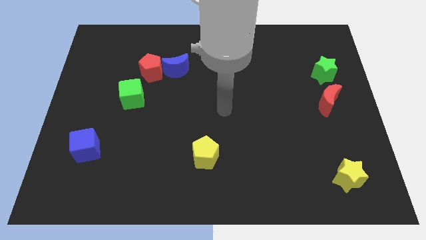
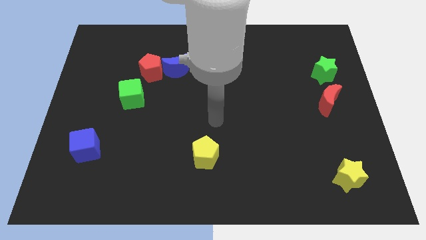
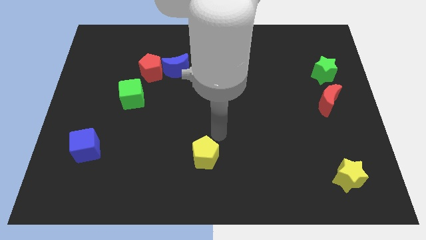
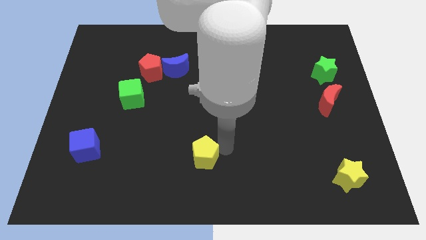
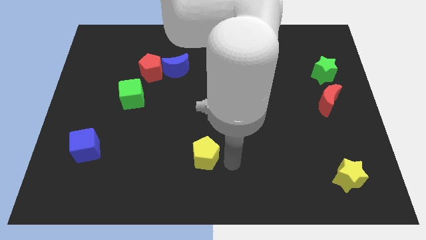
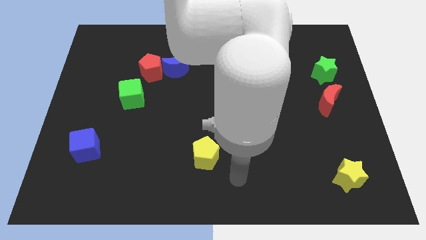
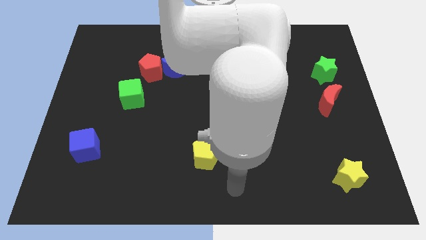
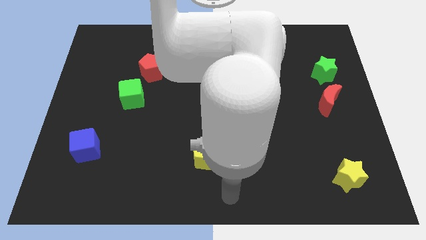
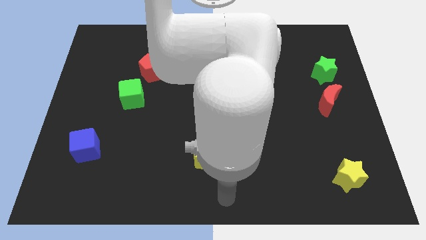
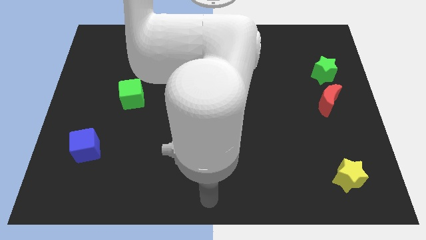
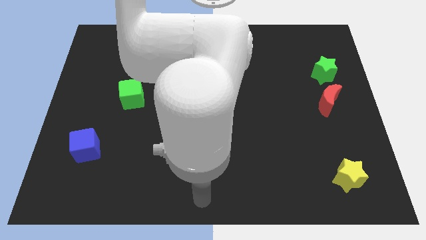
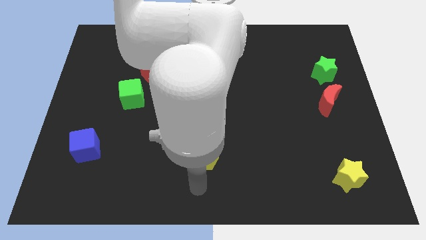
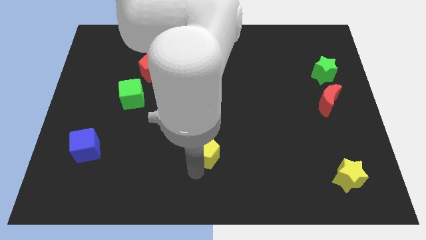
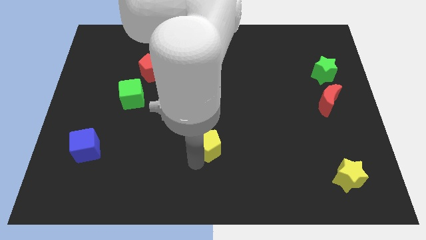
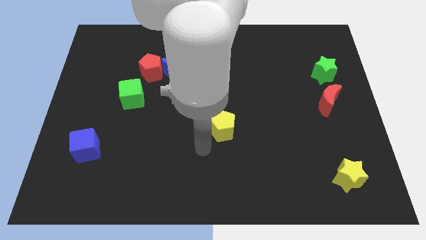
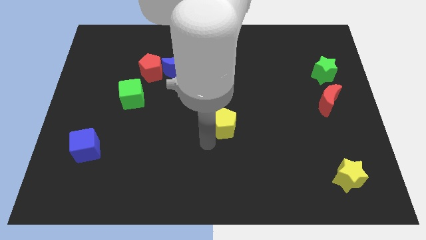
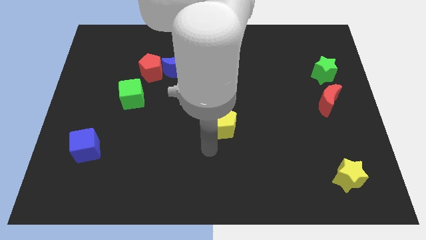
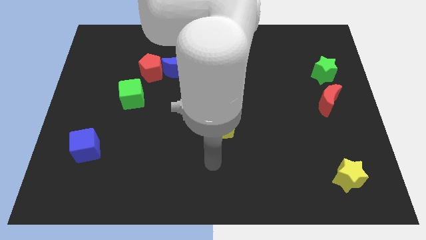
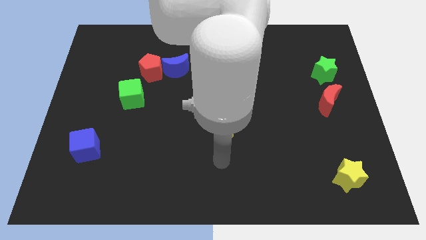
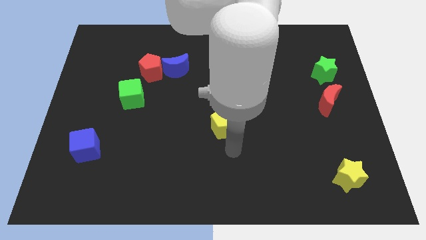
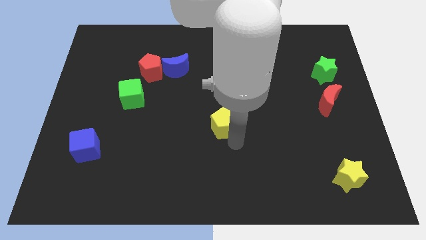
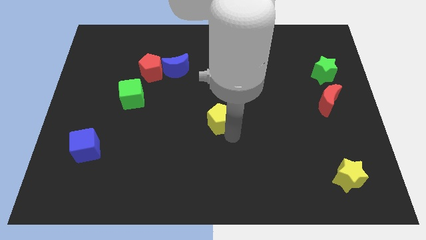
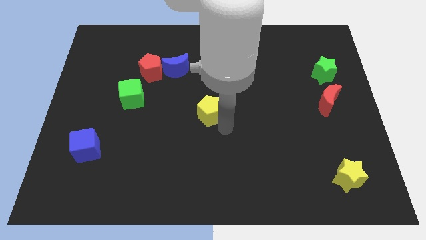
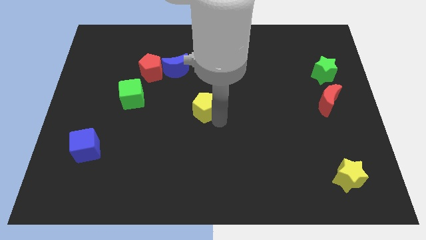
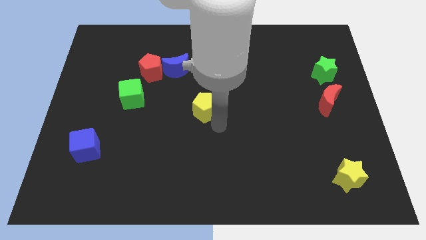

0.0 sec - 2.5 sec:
place yellow pentagon beside red crescent

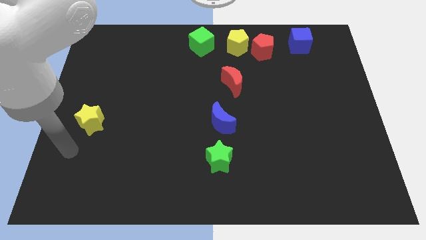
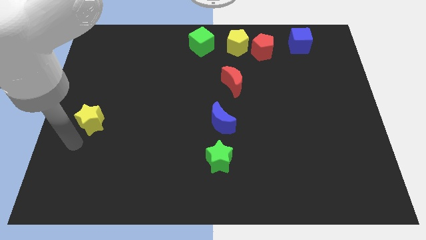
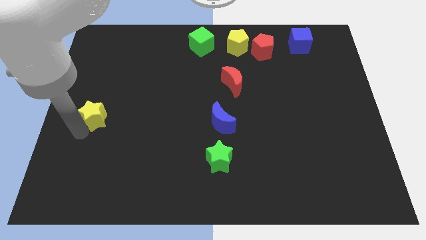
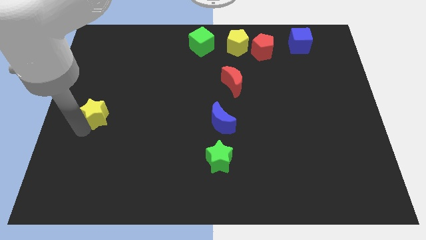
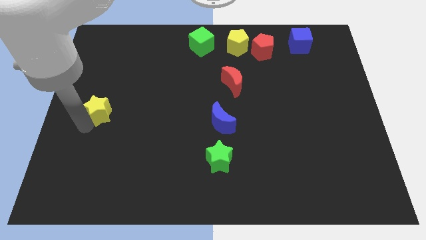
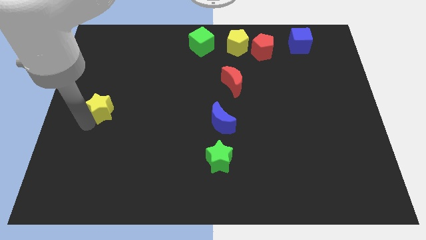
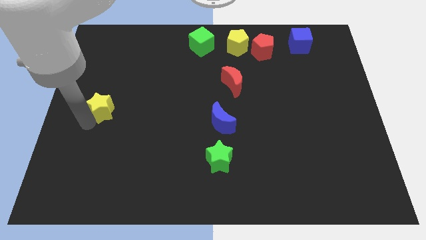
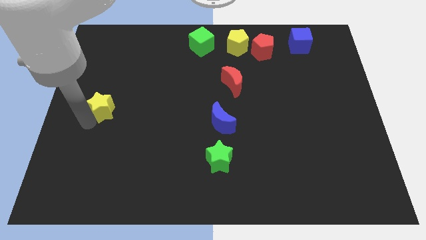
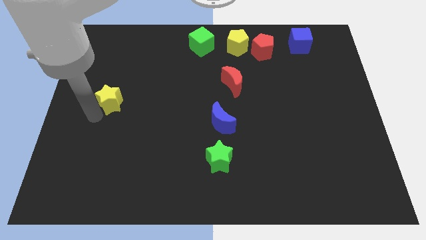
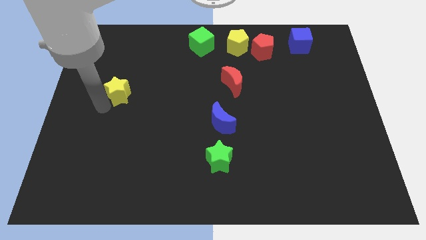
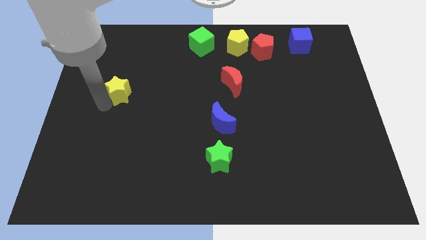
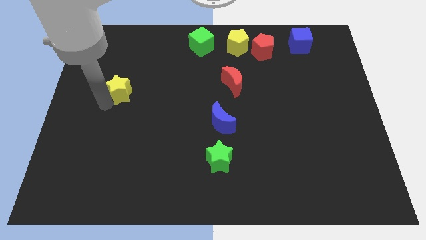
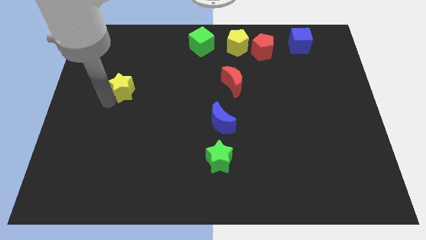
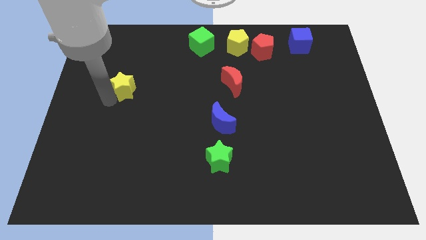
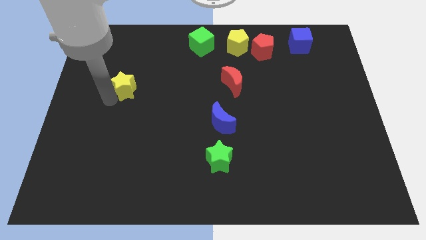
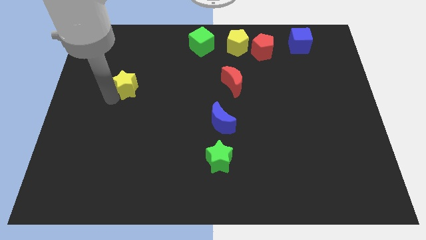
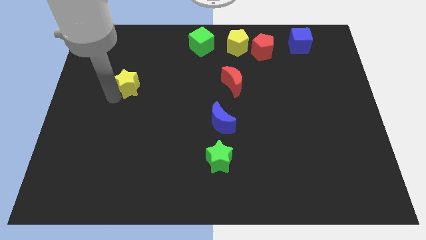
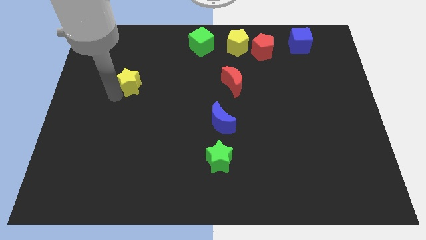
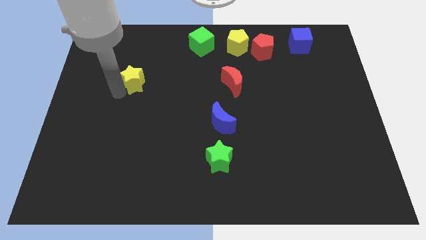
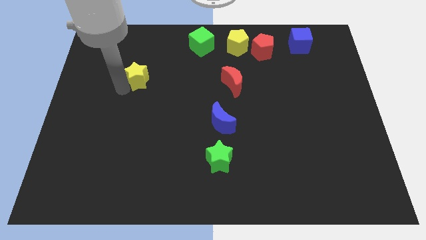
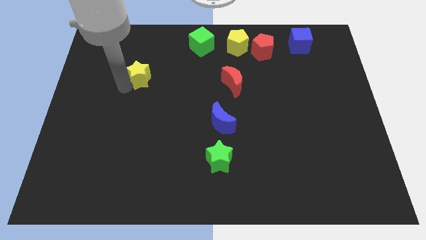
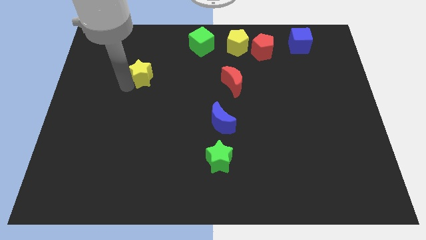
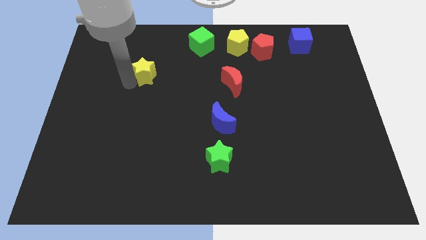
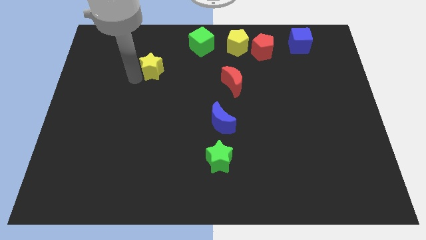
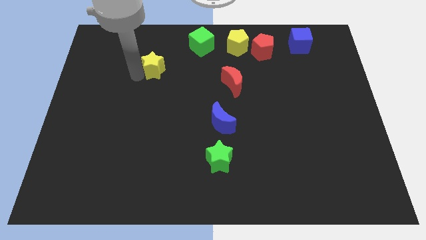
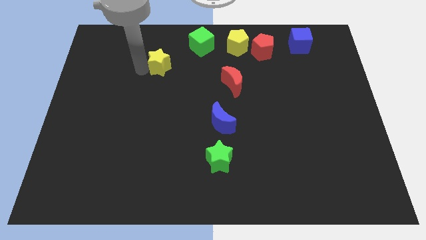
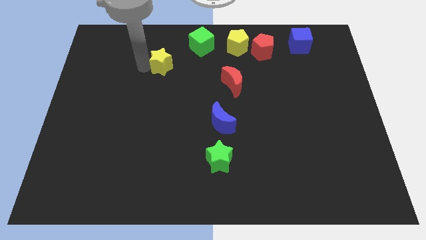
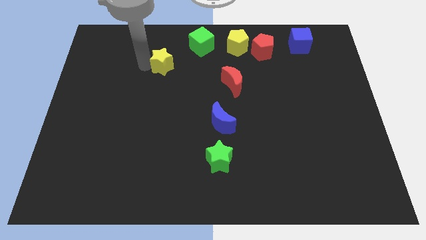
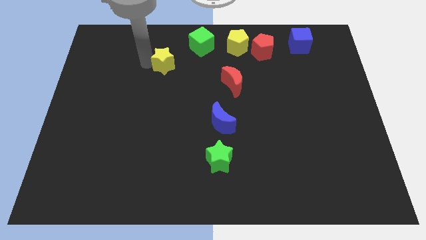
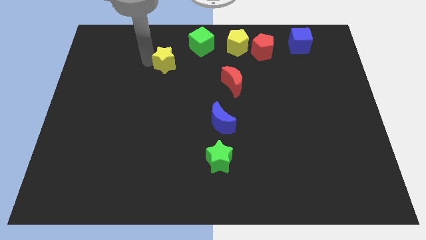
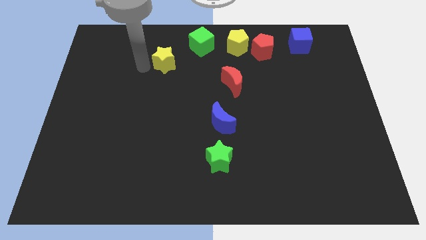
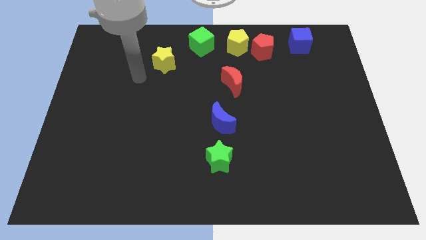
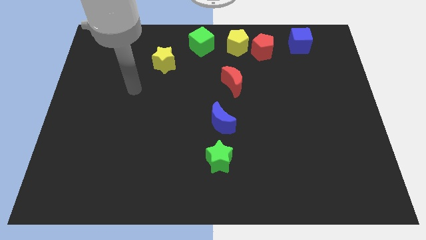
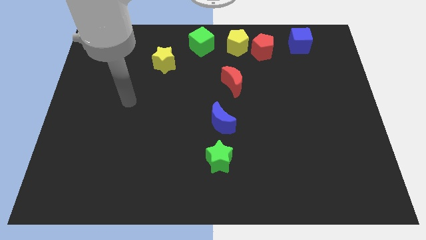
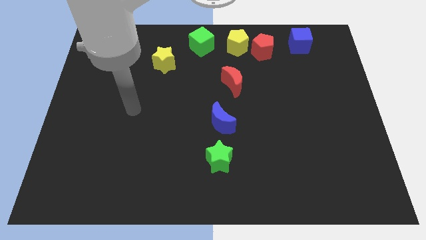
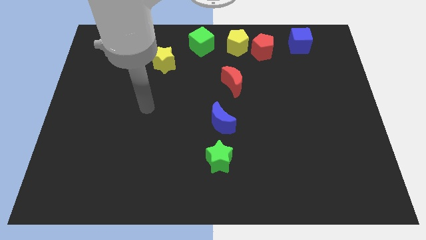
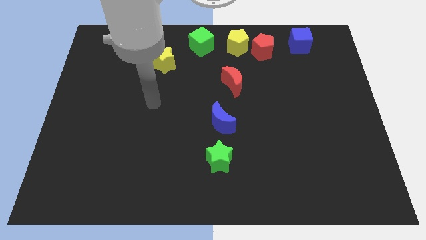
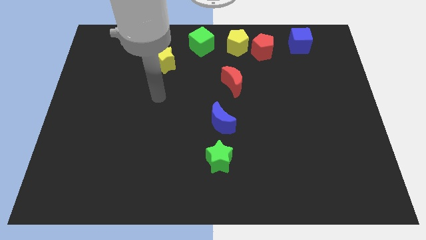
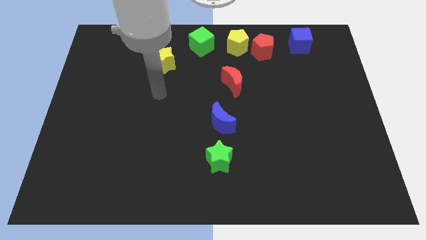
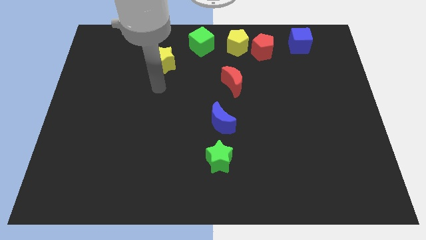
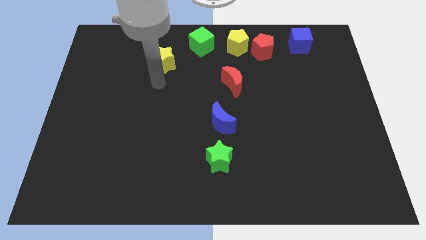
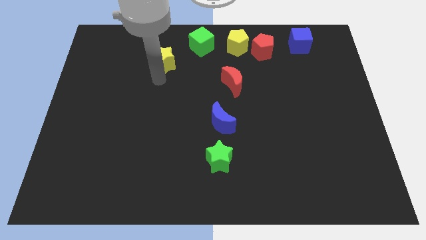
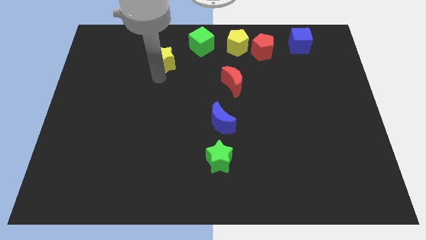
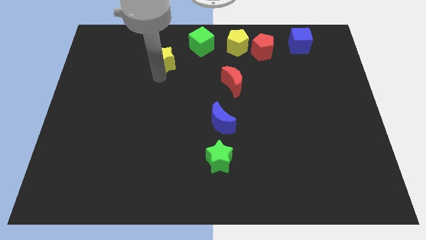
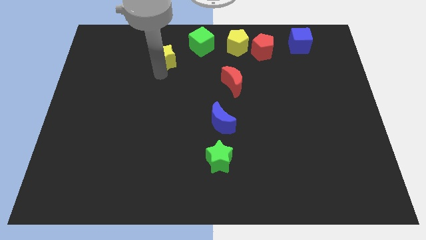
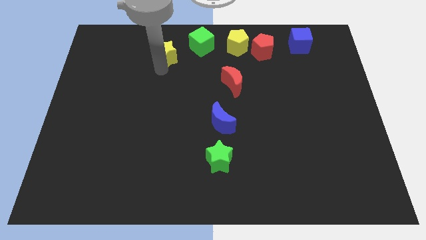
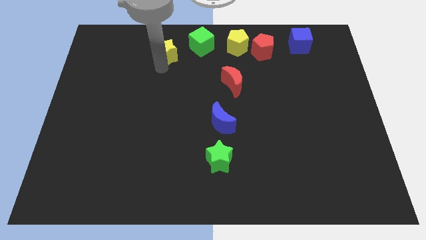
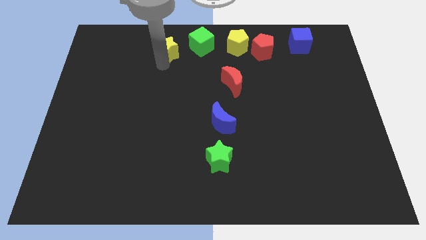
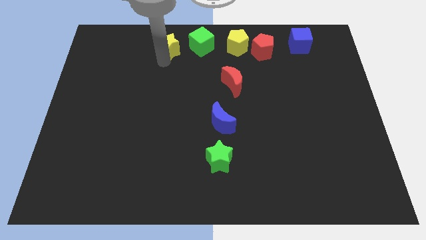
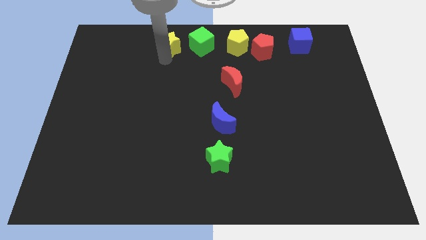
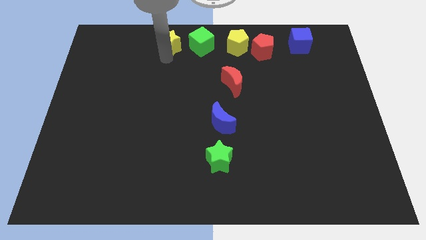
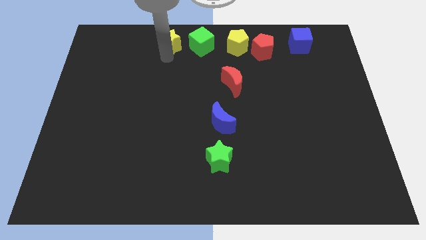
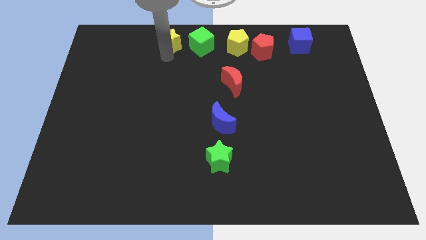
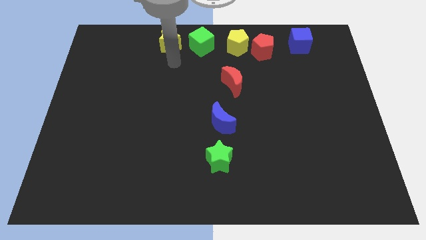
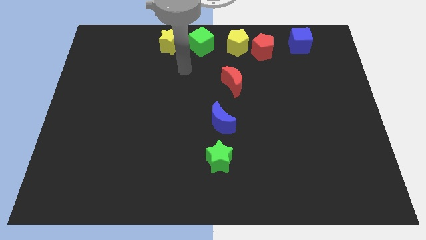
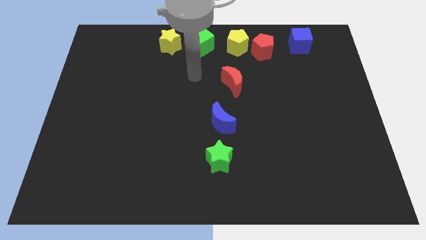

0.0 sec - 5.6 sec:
push the yellow star to the left of the green cube

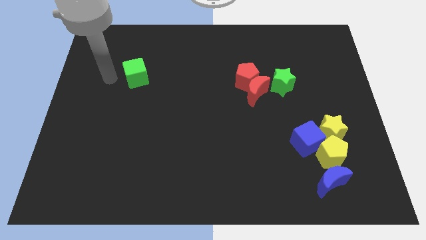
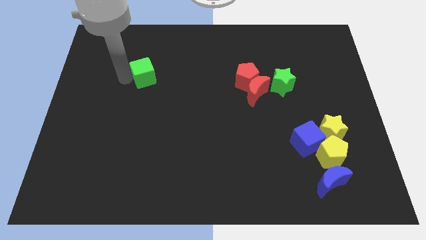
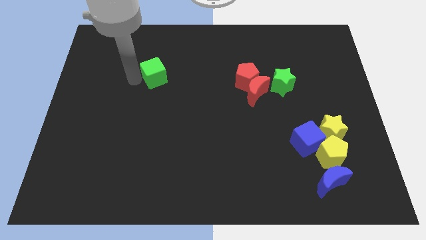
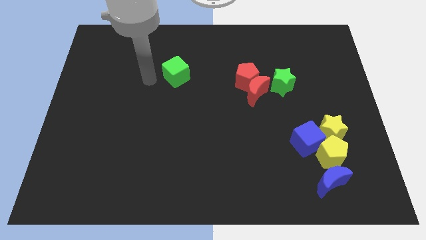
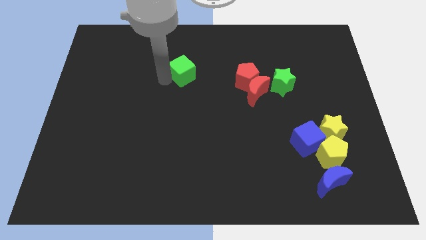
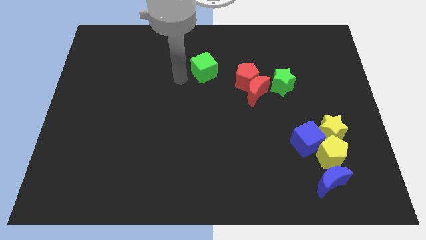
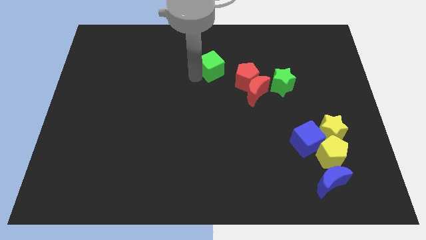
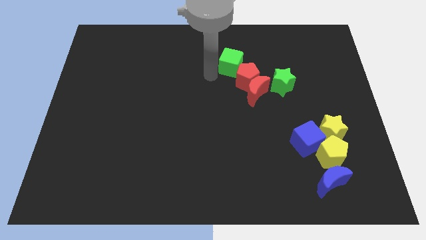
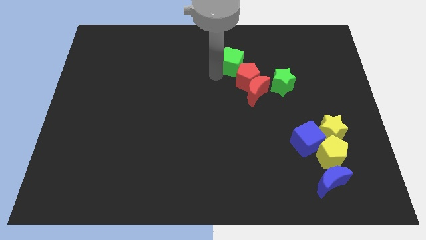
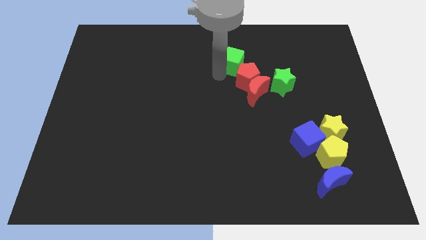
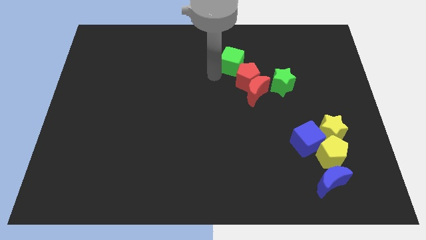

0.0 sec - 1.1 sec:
place the green cube above the red pentagon
